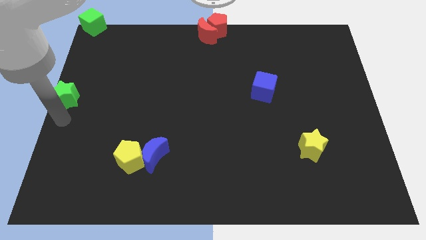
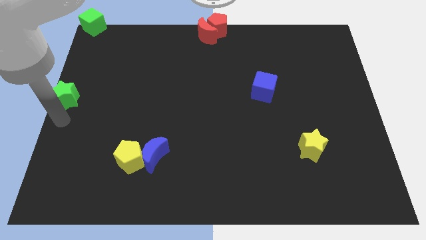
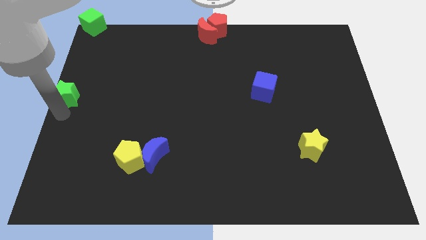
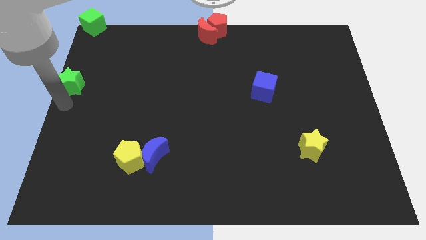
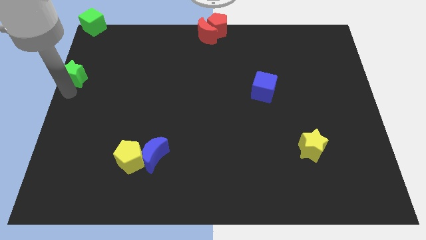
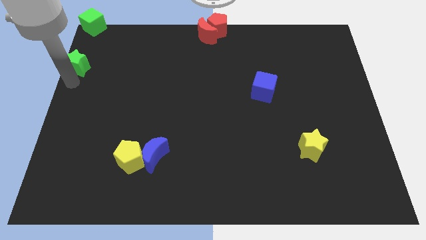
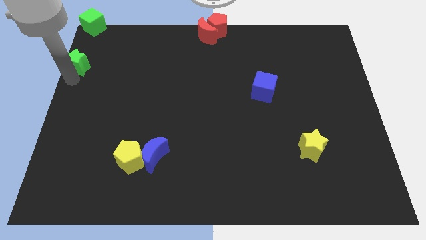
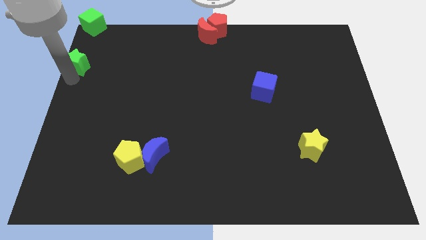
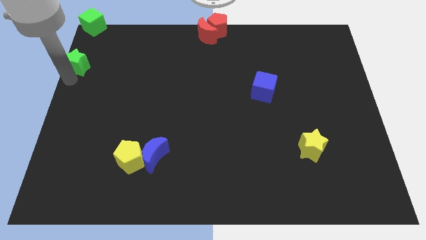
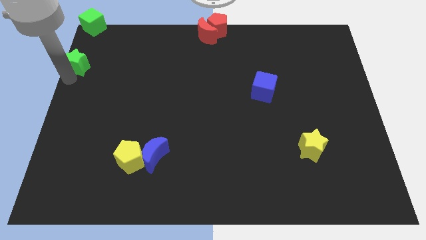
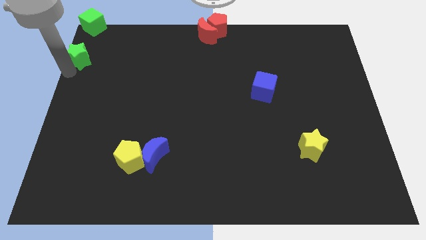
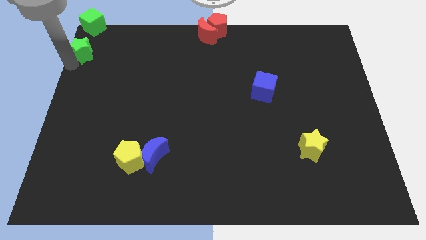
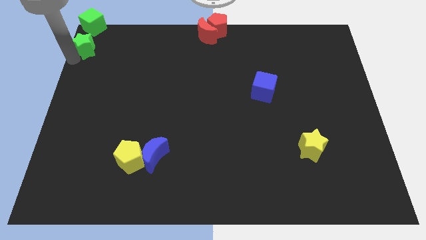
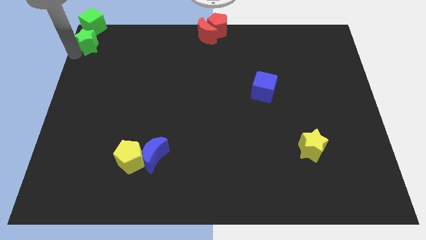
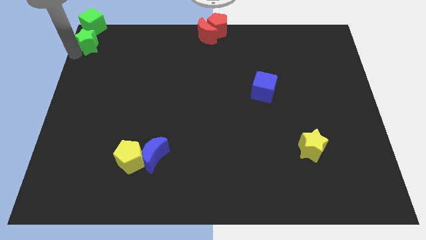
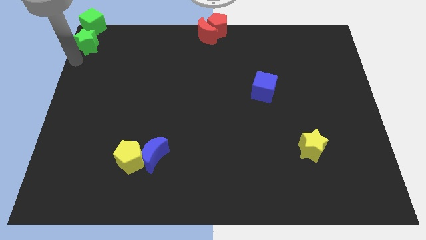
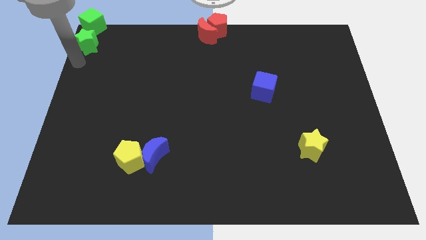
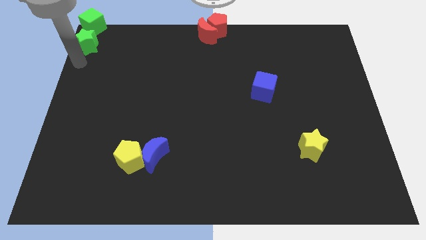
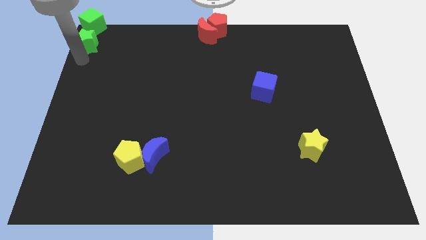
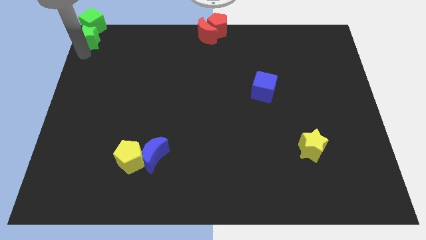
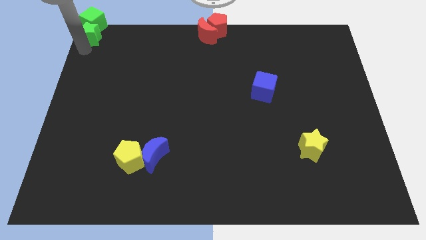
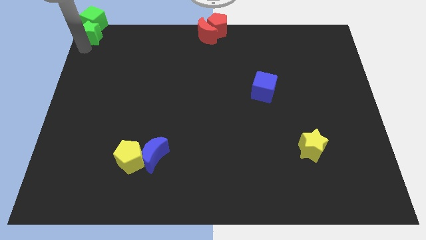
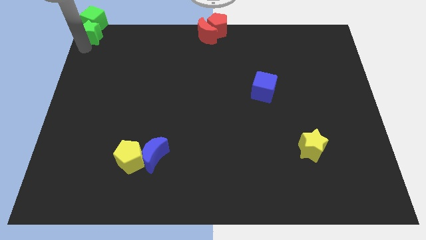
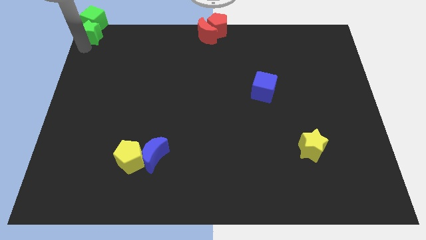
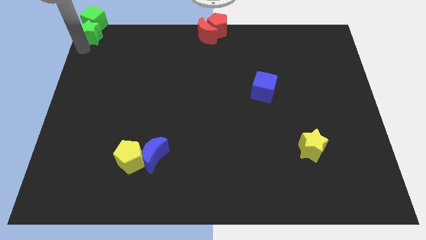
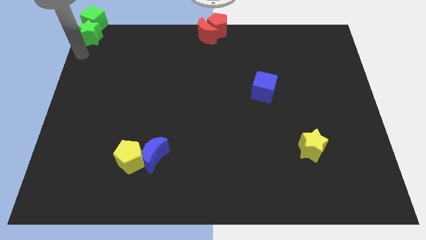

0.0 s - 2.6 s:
push the green star into the green cube

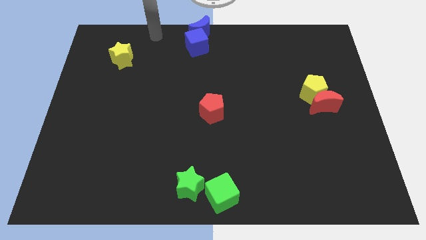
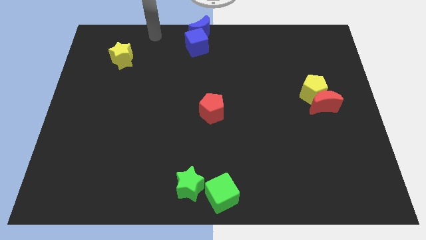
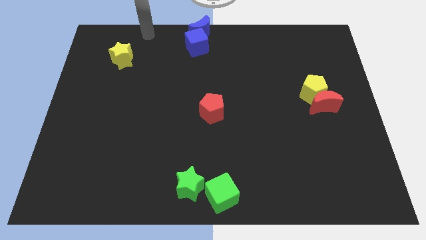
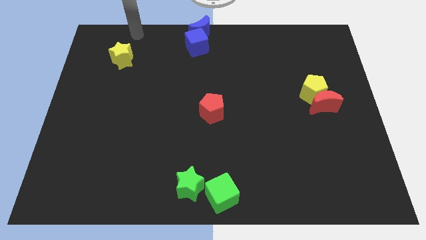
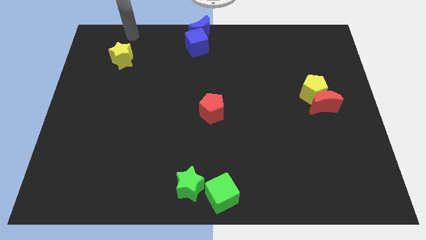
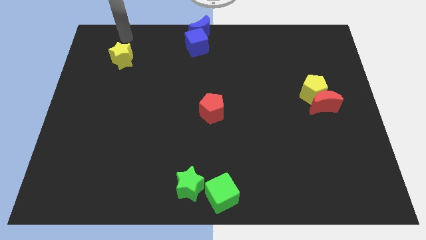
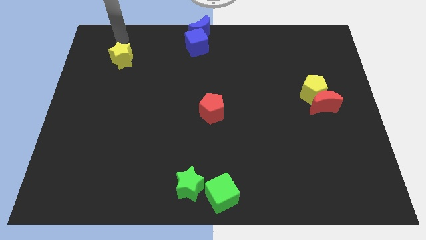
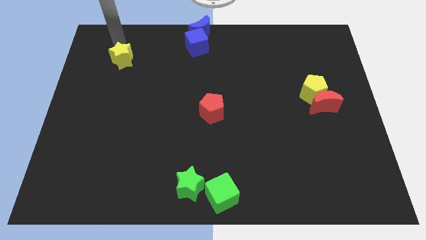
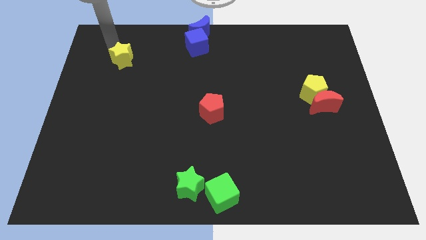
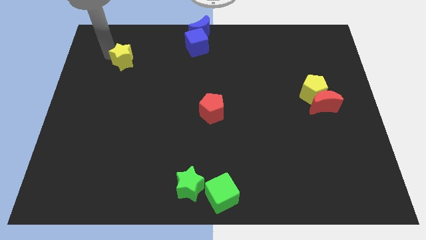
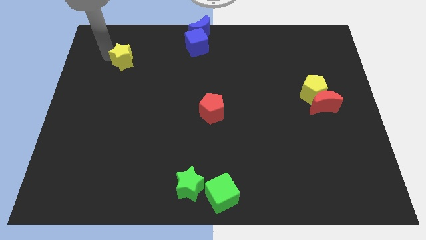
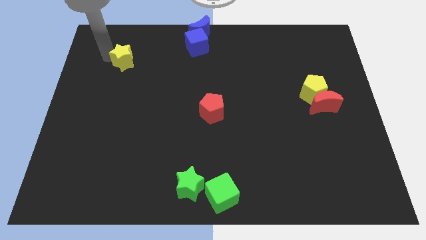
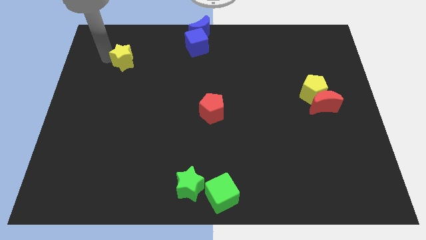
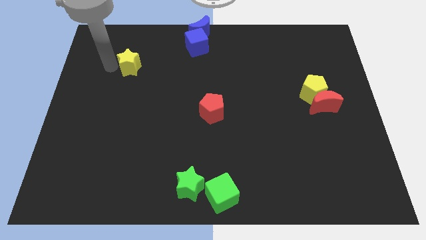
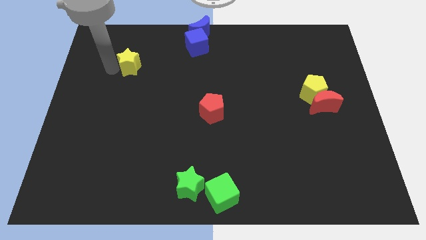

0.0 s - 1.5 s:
slide the yellow star slightly towards the right

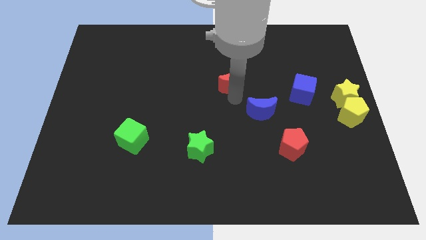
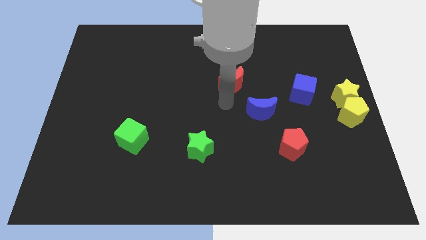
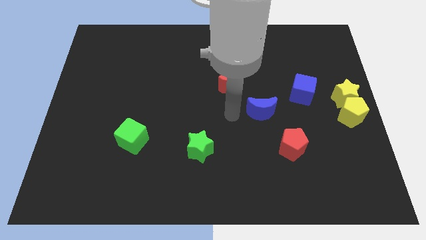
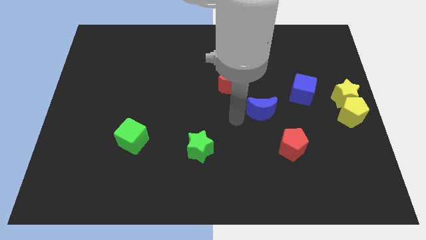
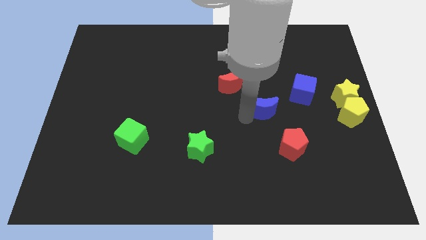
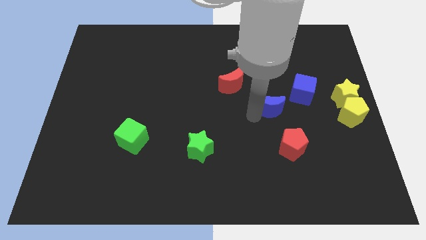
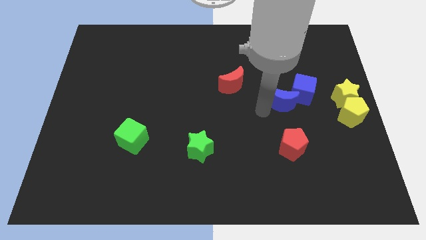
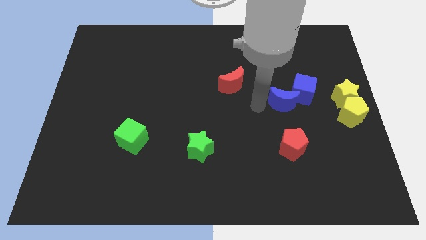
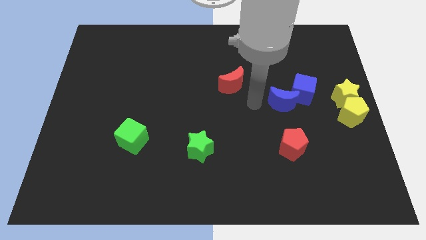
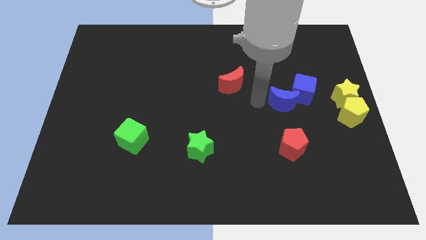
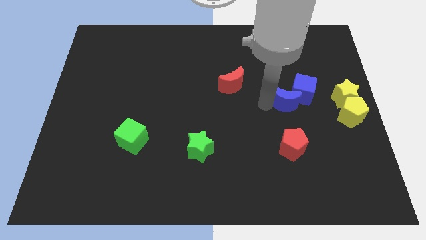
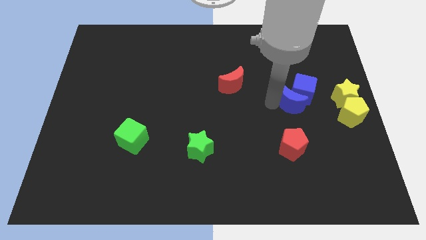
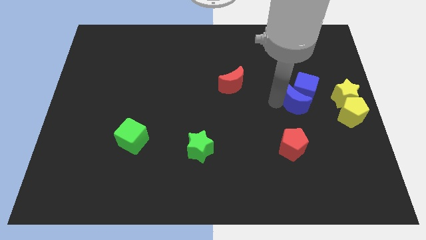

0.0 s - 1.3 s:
push the blue moon to the bottom side of the blue cube

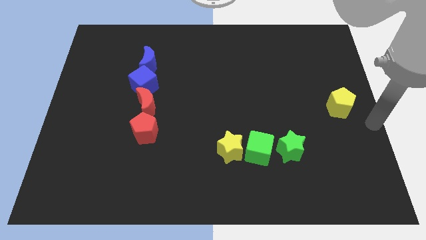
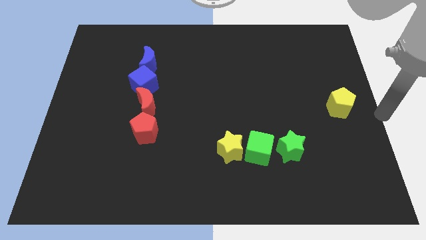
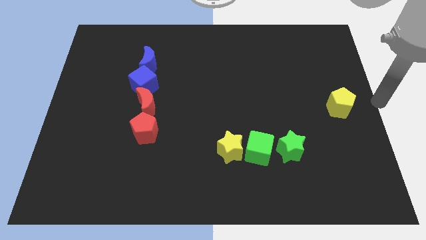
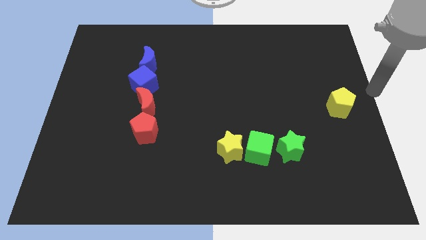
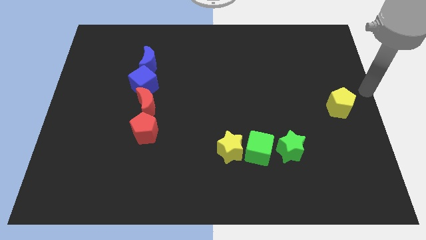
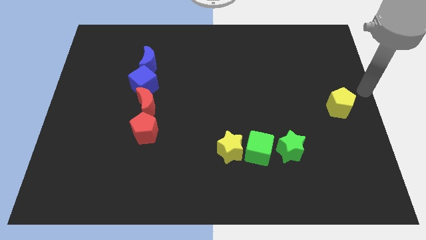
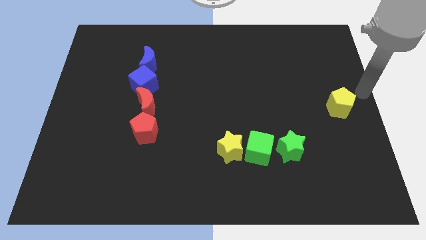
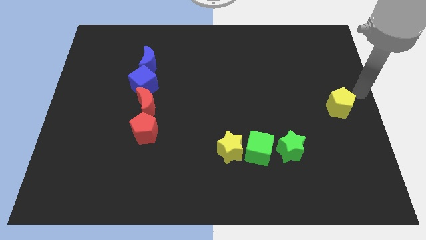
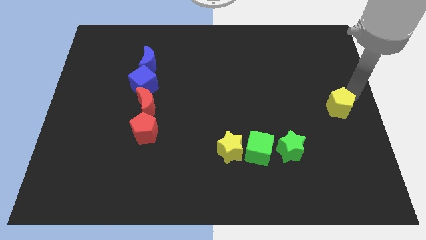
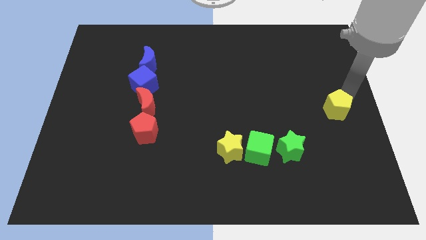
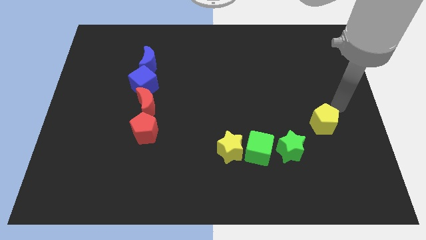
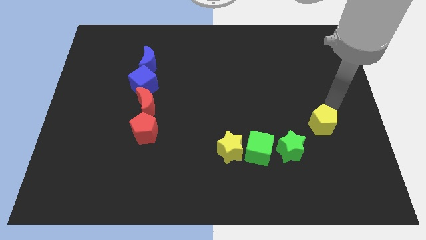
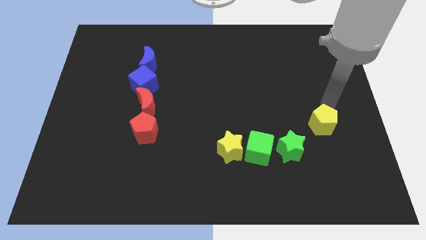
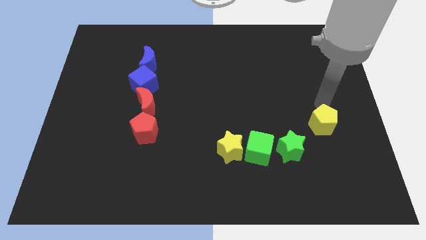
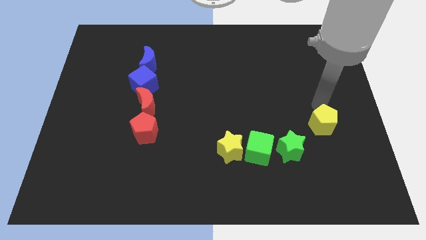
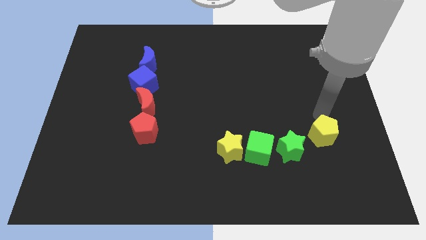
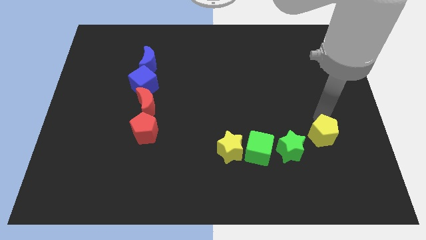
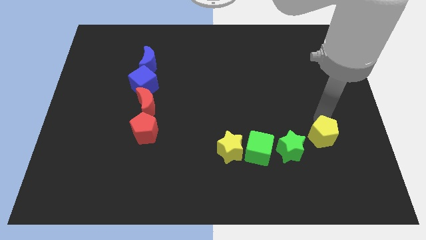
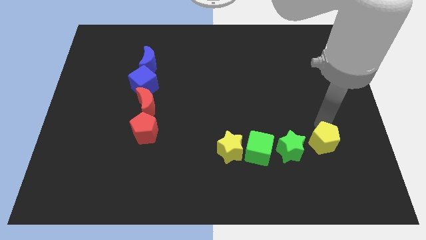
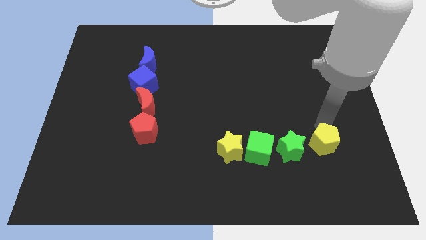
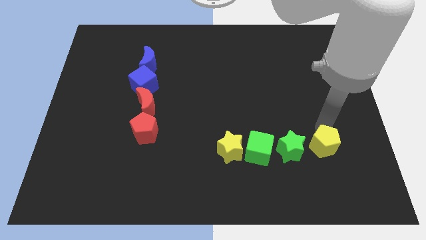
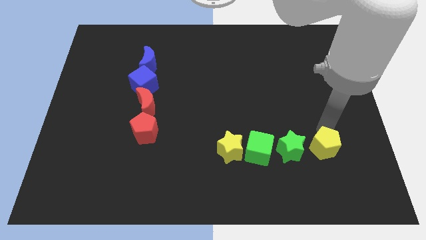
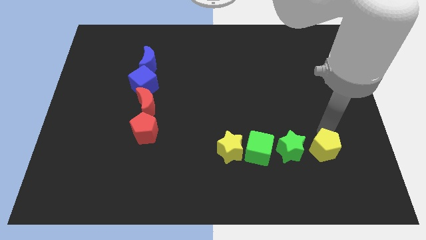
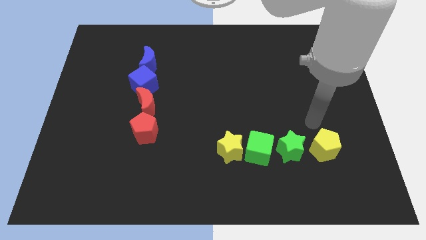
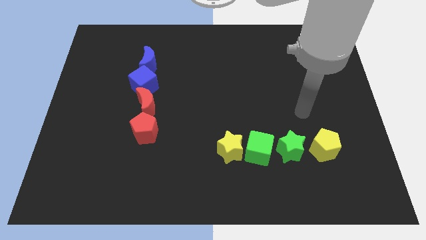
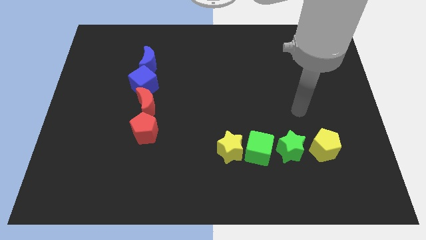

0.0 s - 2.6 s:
place the yellow pentagon to the right of the green star

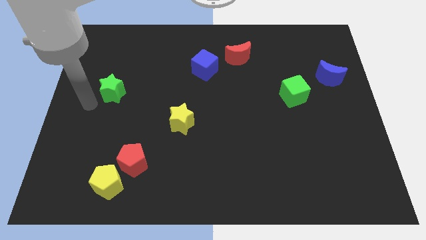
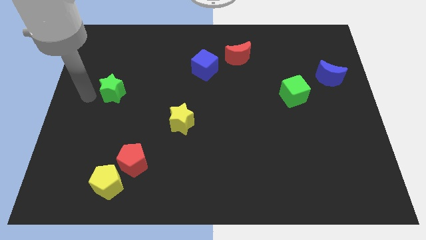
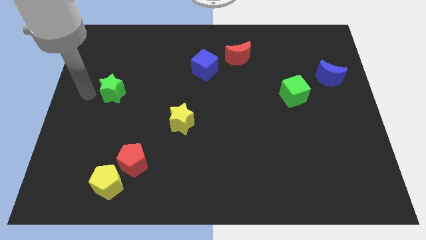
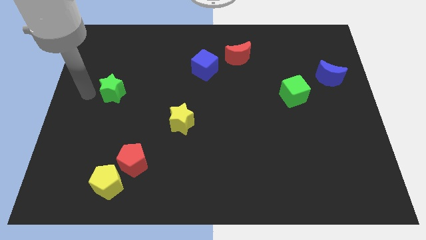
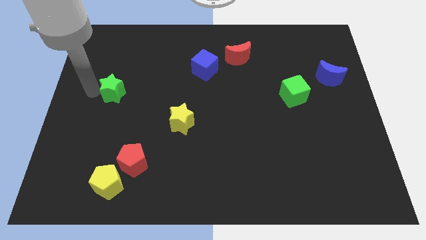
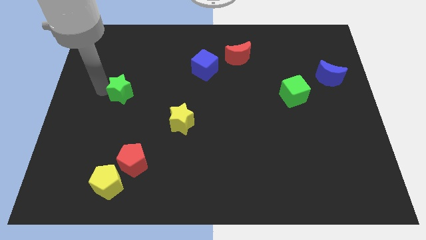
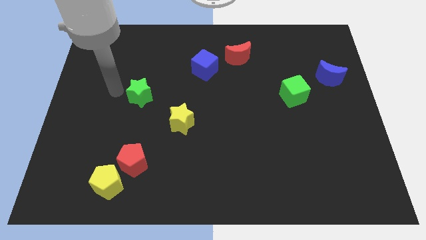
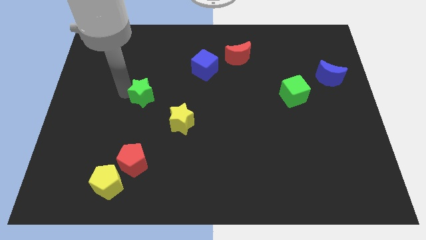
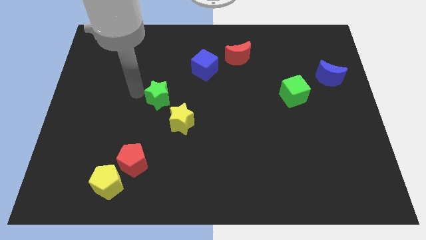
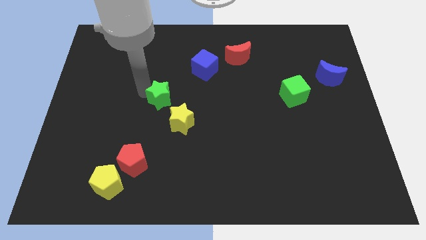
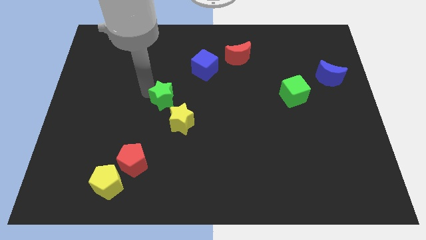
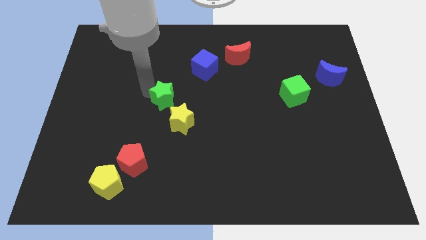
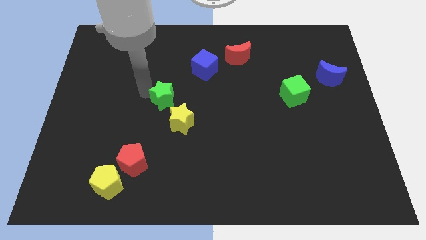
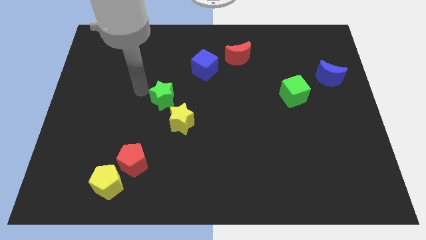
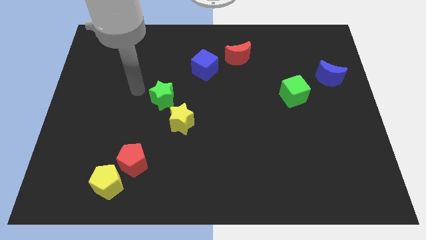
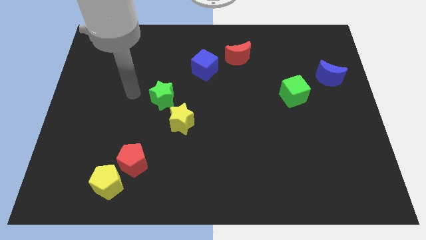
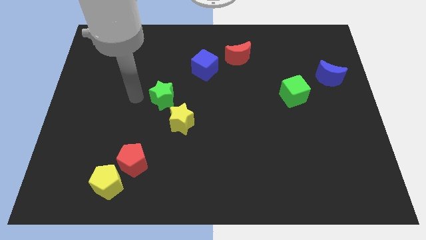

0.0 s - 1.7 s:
push the green star to the top left of the yellow star
